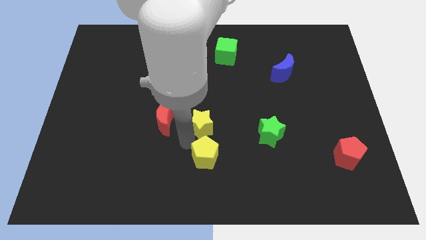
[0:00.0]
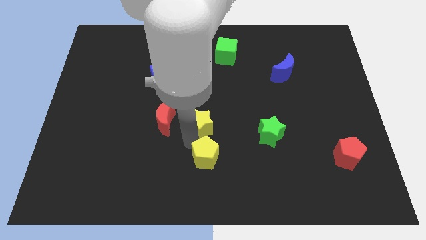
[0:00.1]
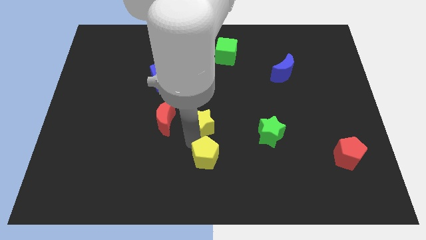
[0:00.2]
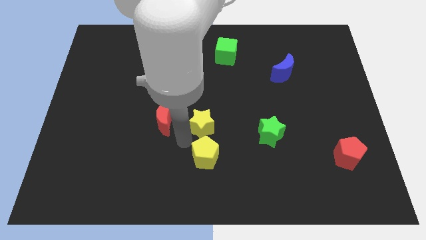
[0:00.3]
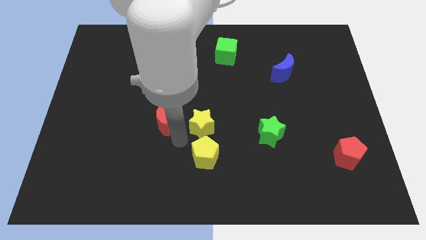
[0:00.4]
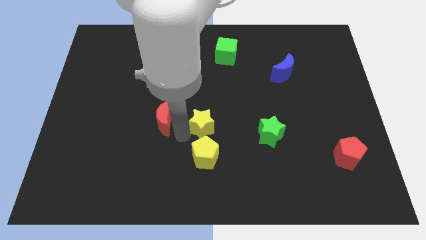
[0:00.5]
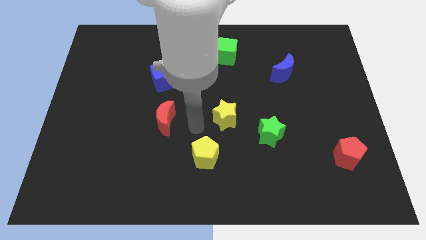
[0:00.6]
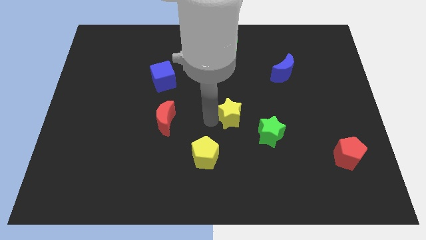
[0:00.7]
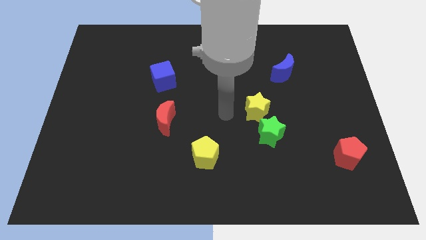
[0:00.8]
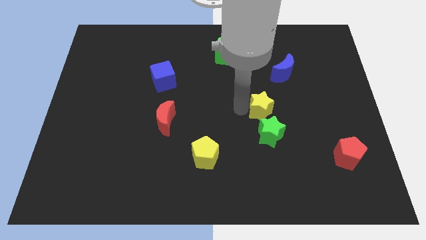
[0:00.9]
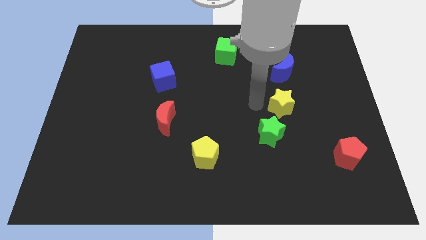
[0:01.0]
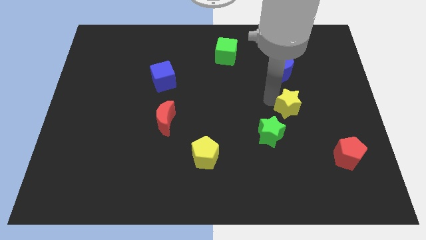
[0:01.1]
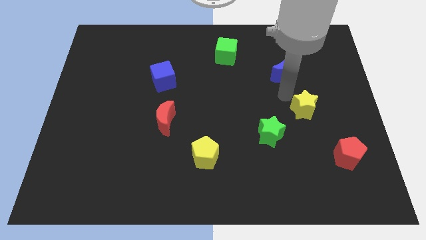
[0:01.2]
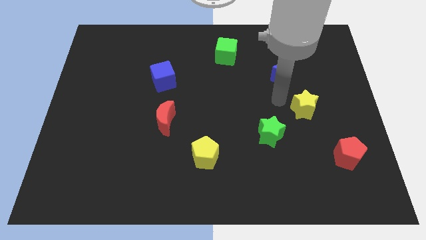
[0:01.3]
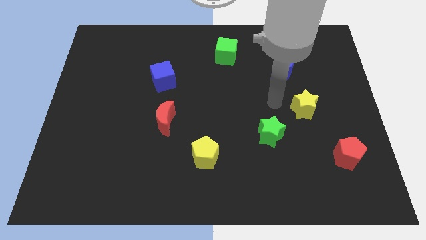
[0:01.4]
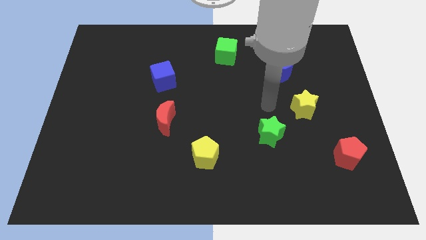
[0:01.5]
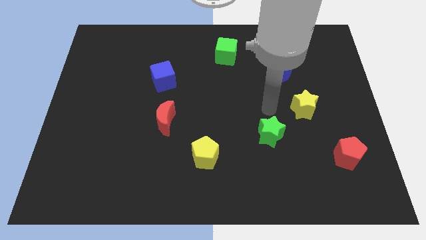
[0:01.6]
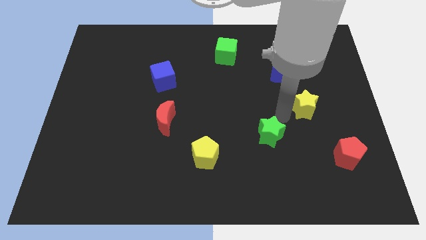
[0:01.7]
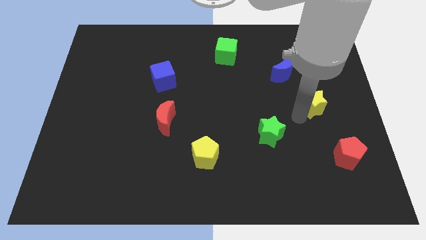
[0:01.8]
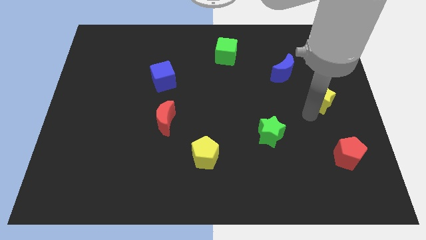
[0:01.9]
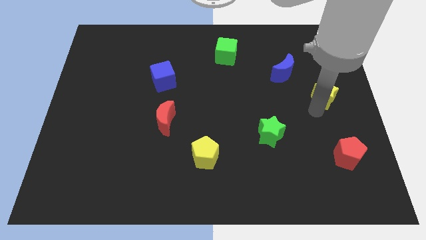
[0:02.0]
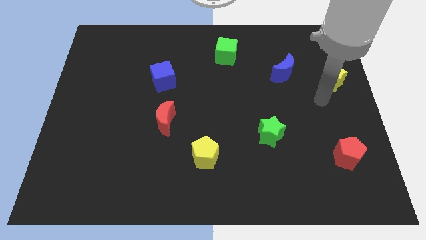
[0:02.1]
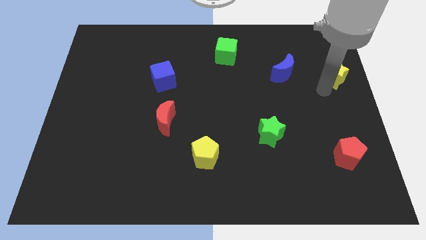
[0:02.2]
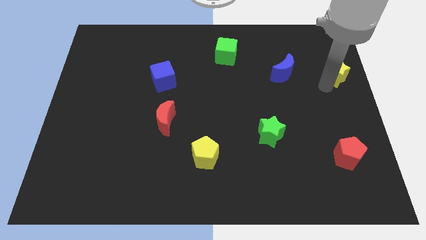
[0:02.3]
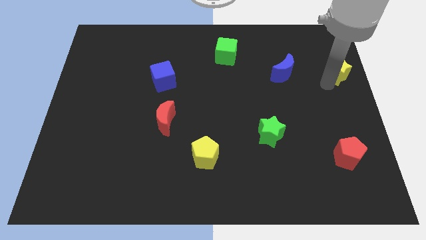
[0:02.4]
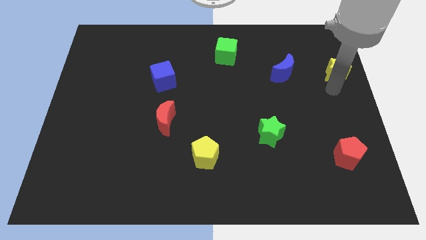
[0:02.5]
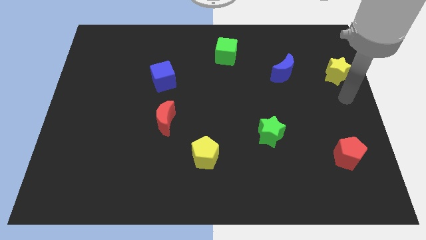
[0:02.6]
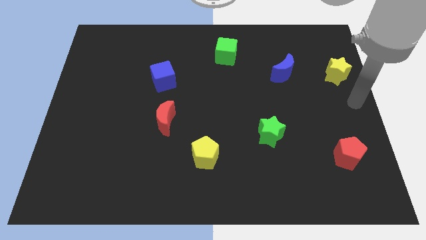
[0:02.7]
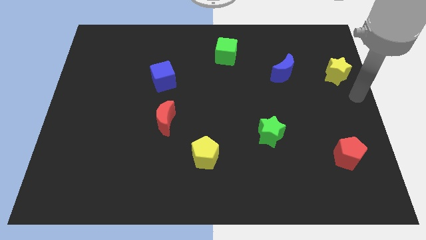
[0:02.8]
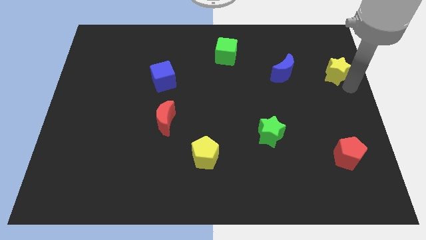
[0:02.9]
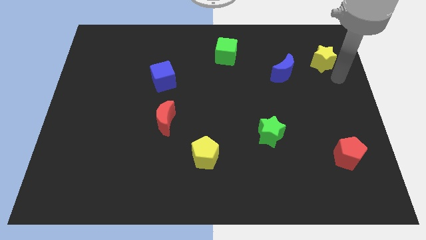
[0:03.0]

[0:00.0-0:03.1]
push the yellow star to the top right side of the blue moon

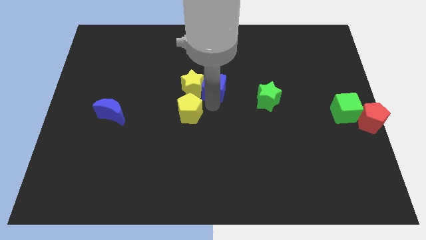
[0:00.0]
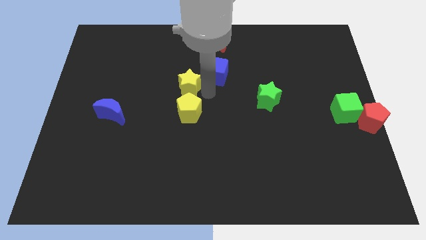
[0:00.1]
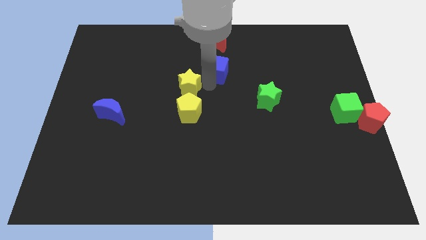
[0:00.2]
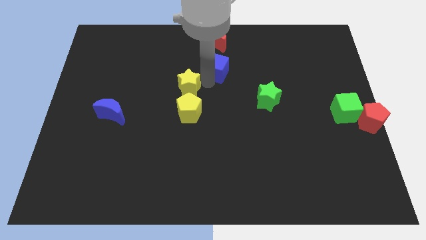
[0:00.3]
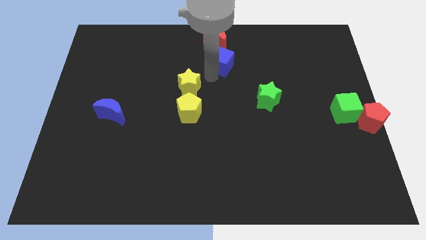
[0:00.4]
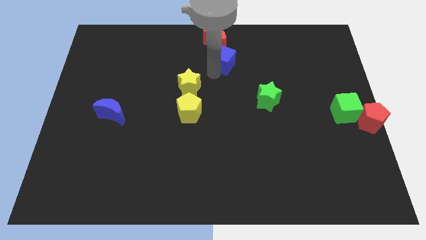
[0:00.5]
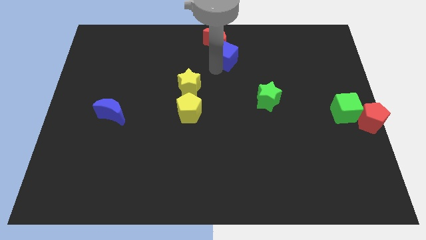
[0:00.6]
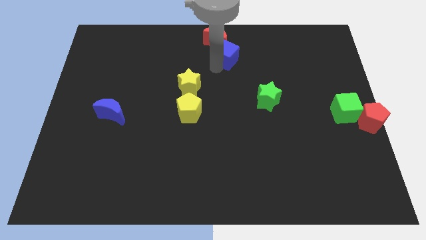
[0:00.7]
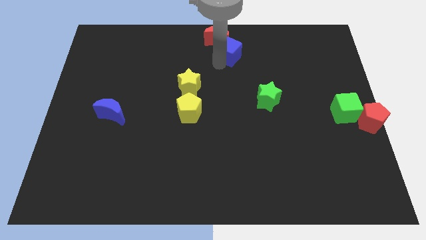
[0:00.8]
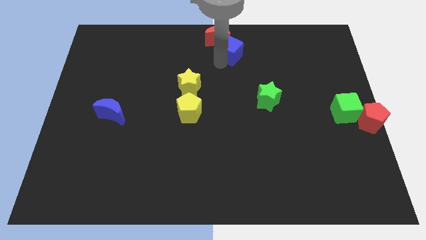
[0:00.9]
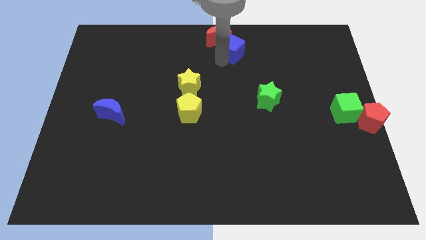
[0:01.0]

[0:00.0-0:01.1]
move the blue cube away from the yellow star

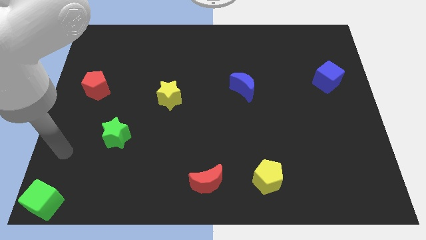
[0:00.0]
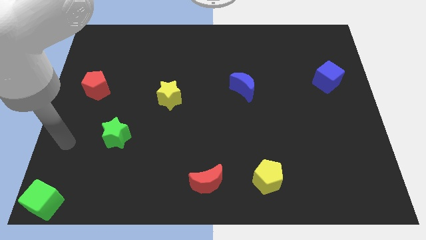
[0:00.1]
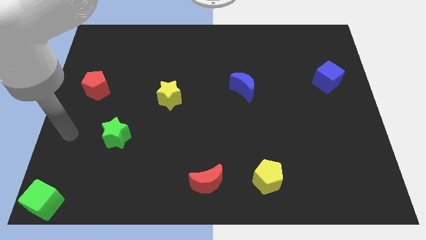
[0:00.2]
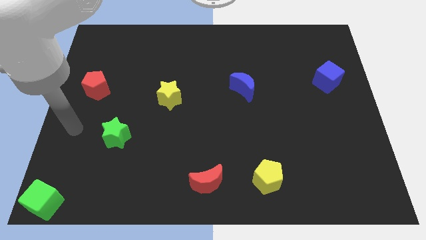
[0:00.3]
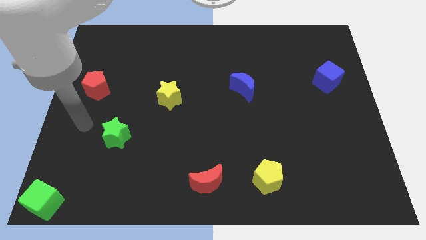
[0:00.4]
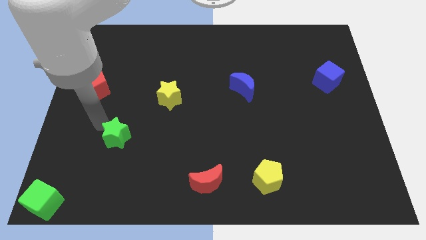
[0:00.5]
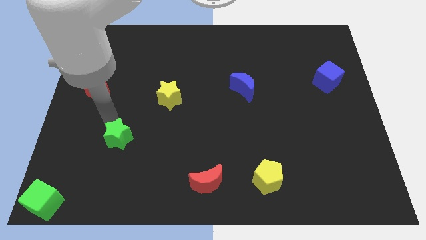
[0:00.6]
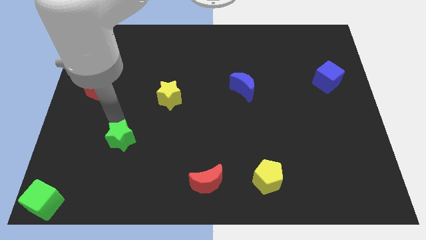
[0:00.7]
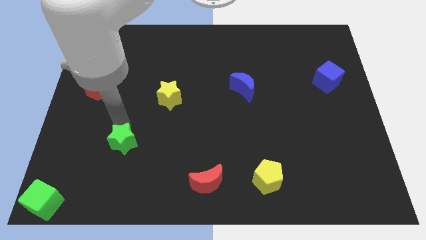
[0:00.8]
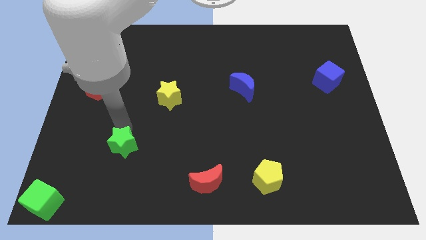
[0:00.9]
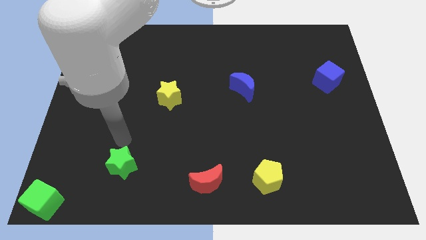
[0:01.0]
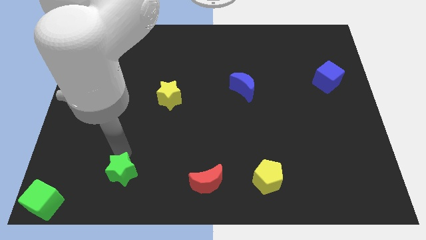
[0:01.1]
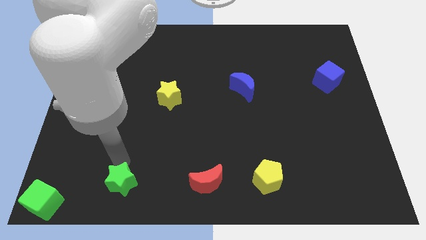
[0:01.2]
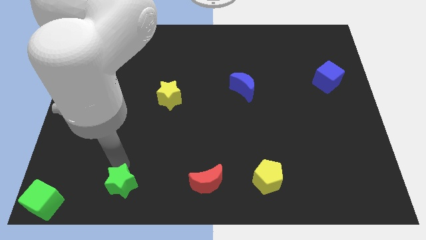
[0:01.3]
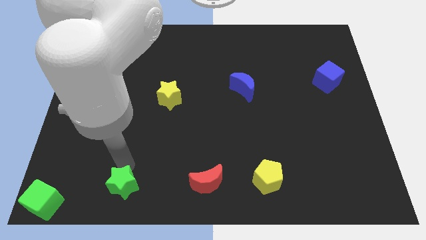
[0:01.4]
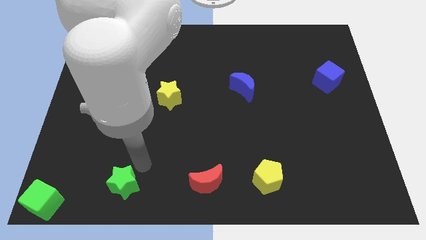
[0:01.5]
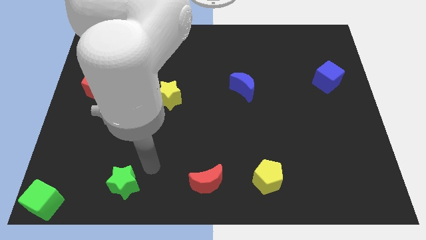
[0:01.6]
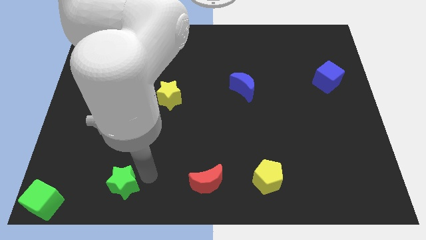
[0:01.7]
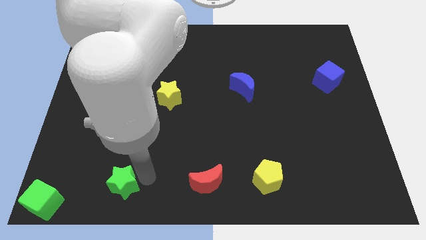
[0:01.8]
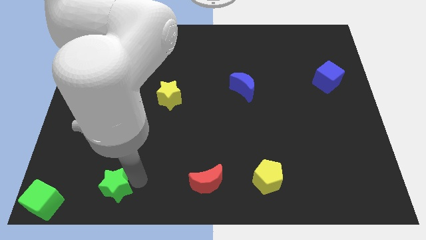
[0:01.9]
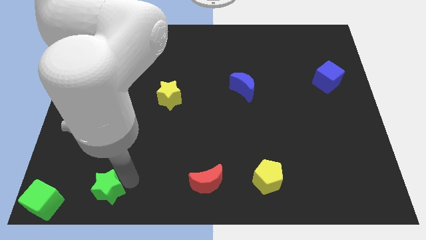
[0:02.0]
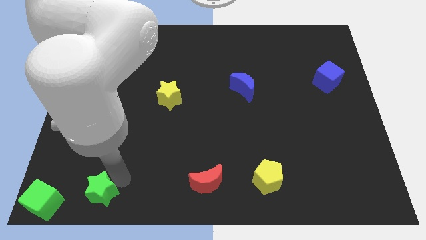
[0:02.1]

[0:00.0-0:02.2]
move the green star towards the green cube

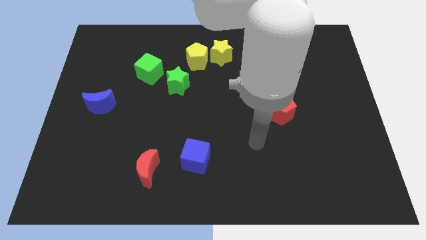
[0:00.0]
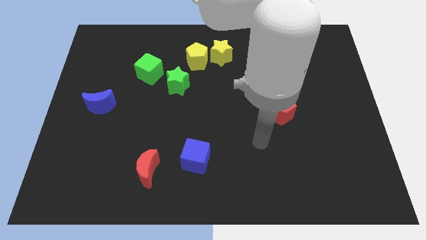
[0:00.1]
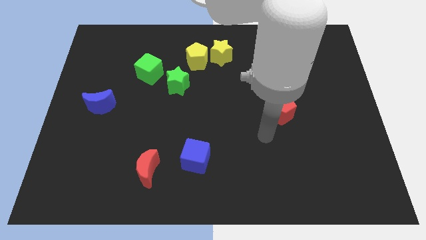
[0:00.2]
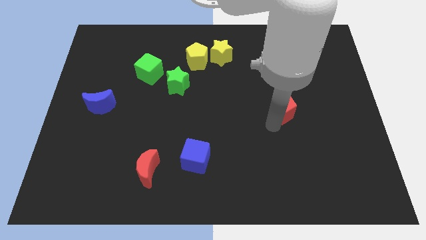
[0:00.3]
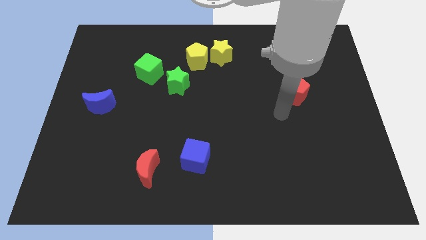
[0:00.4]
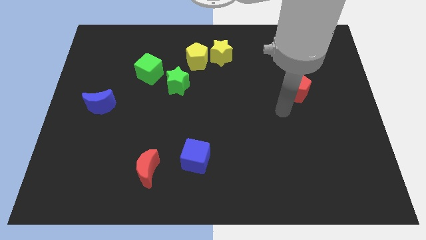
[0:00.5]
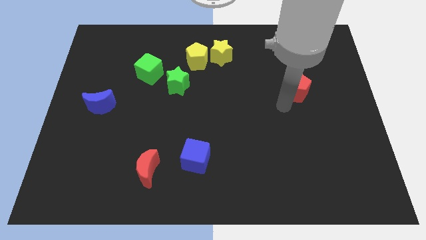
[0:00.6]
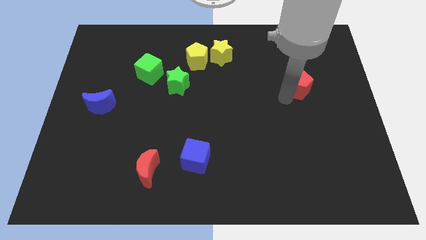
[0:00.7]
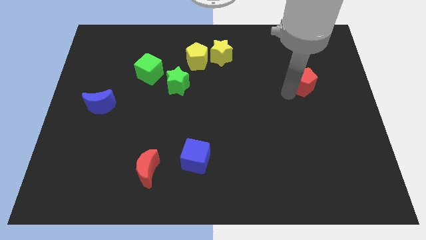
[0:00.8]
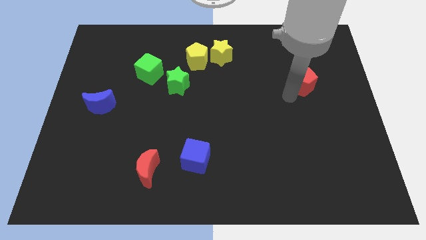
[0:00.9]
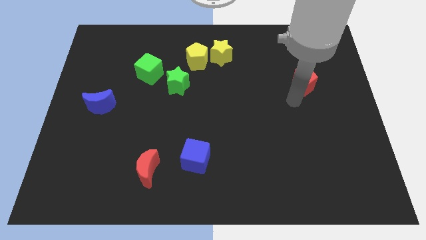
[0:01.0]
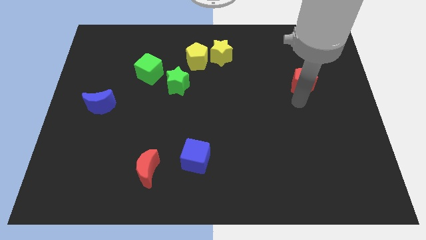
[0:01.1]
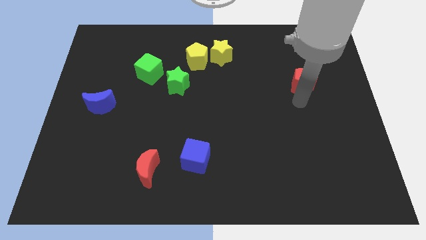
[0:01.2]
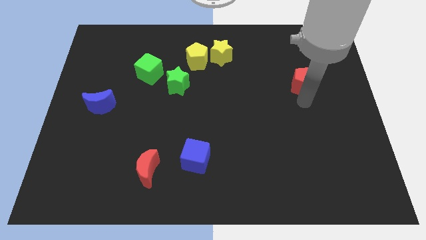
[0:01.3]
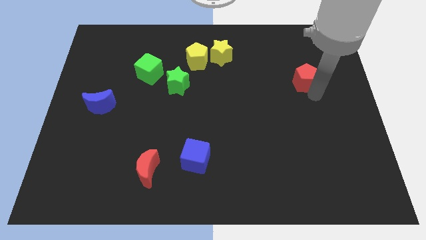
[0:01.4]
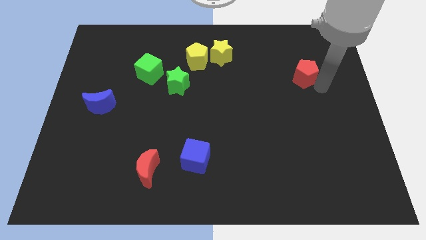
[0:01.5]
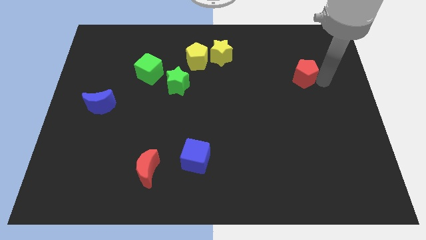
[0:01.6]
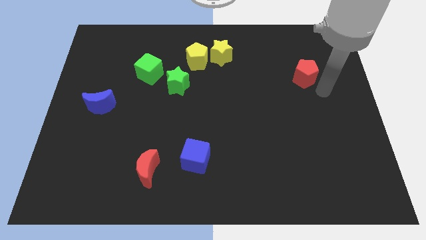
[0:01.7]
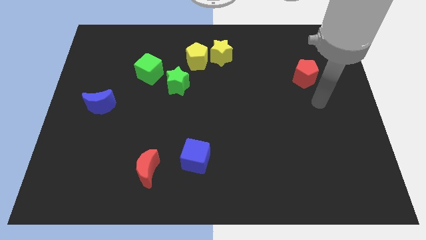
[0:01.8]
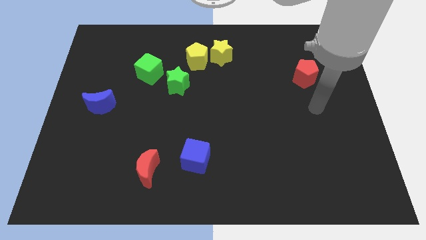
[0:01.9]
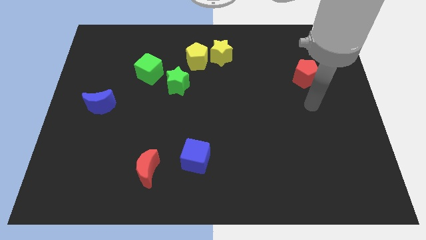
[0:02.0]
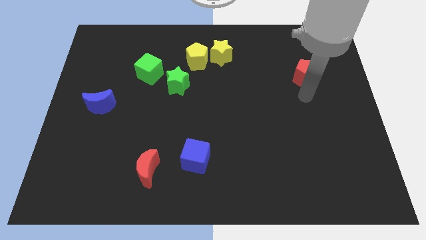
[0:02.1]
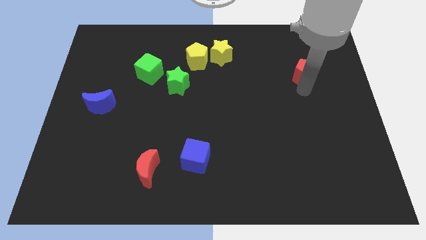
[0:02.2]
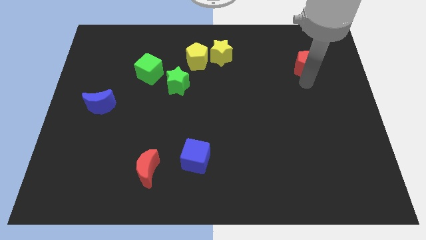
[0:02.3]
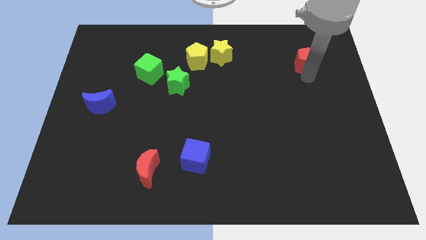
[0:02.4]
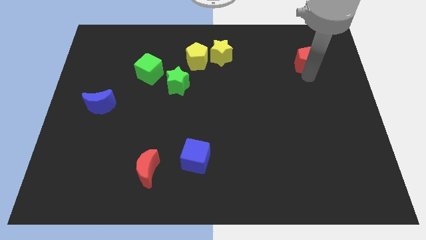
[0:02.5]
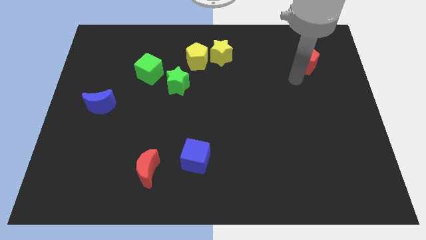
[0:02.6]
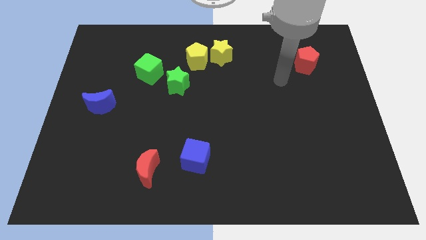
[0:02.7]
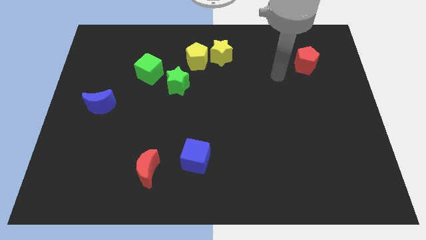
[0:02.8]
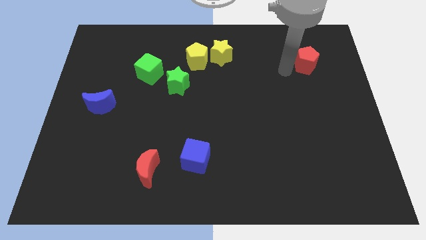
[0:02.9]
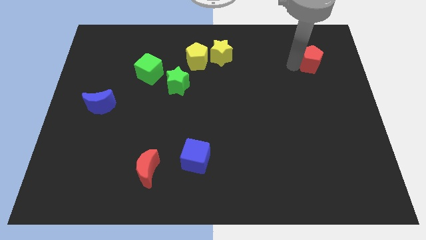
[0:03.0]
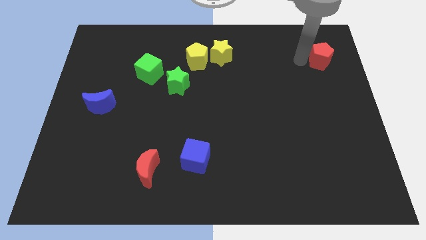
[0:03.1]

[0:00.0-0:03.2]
place the red pentagon horizontally to the right side of the yellow star
